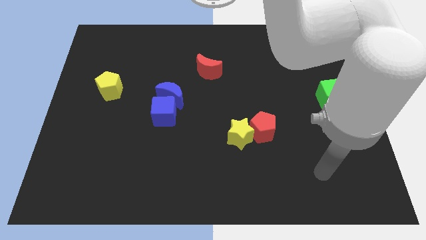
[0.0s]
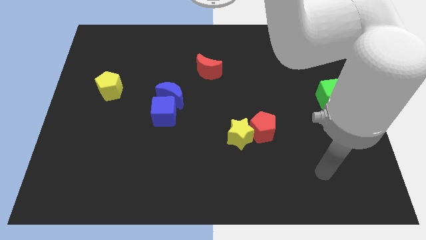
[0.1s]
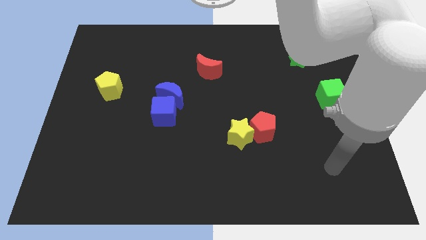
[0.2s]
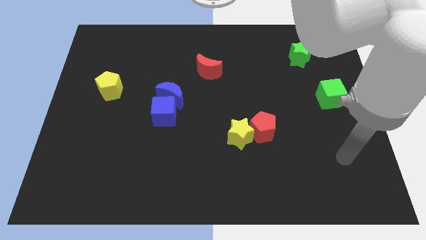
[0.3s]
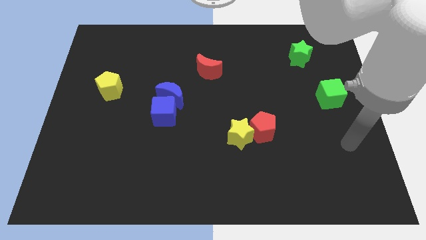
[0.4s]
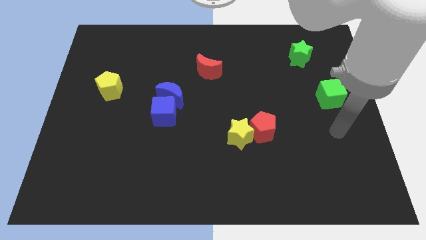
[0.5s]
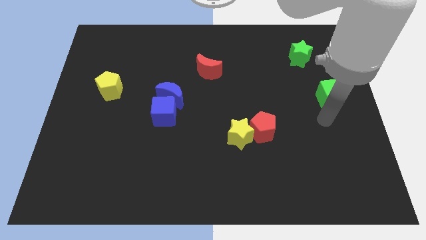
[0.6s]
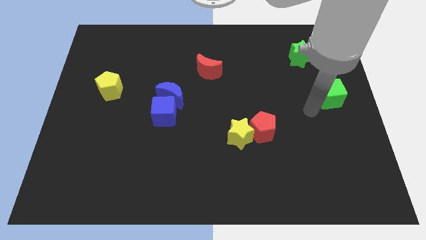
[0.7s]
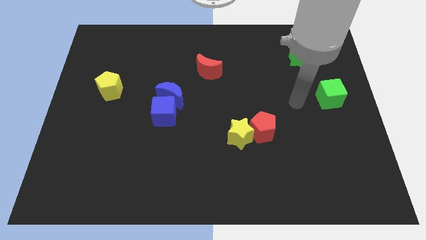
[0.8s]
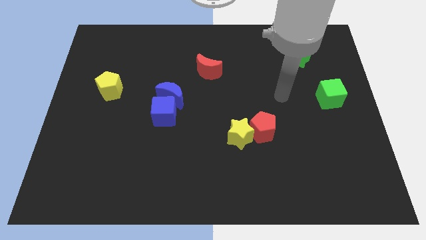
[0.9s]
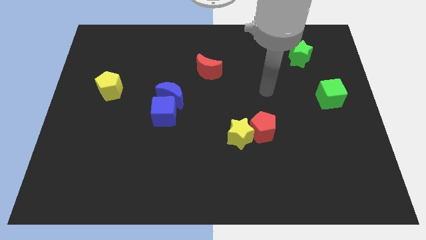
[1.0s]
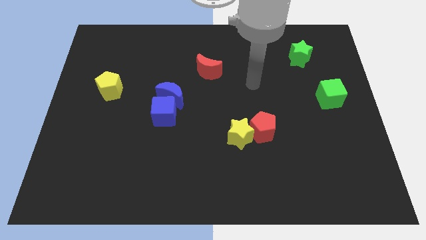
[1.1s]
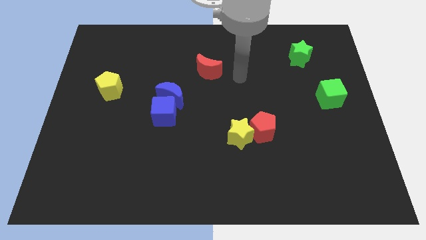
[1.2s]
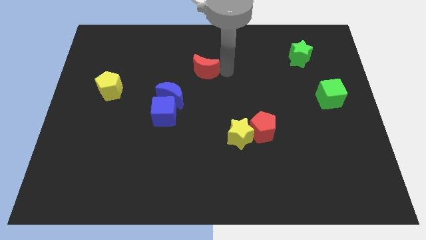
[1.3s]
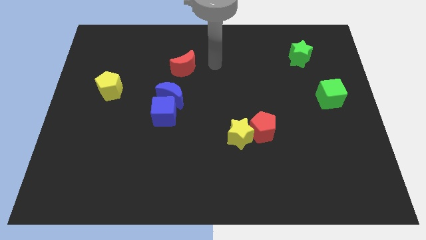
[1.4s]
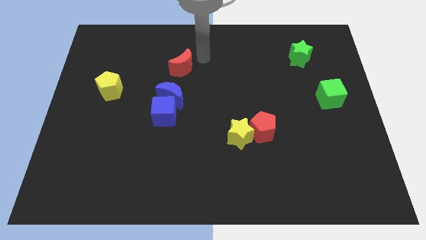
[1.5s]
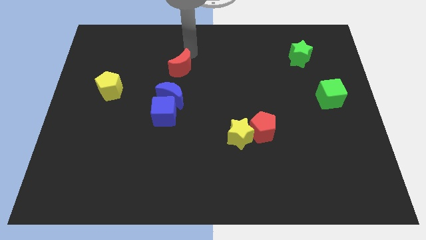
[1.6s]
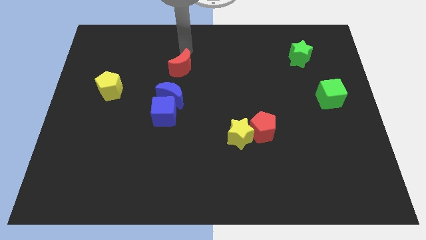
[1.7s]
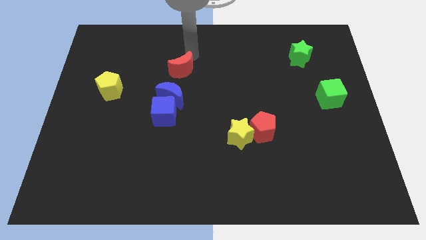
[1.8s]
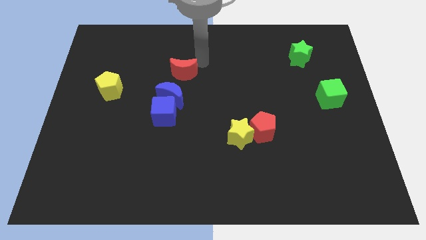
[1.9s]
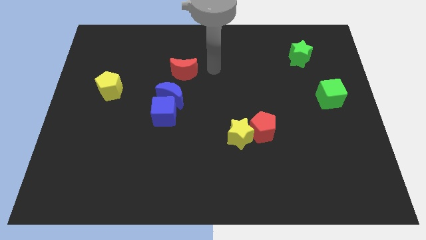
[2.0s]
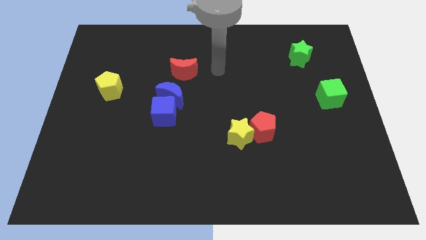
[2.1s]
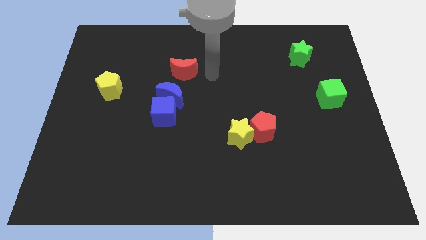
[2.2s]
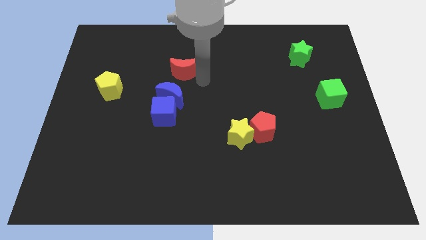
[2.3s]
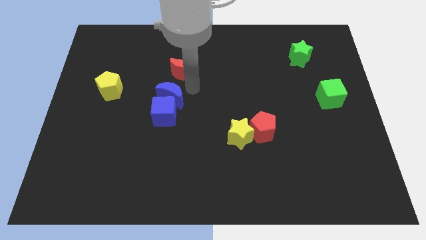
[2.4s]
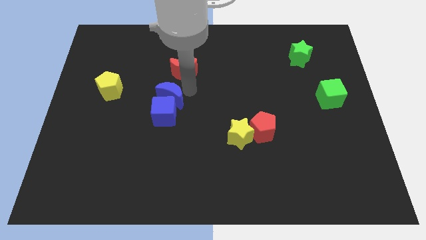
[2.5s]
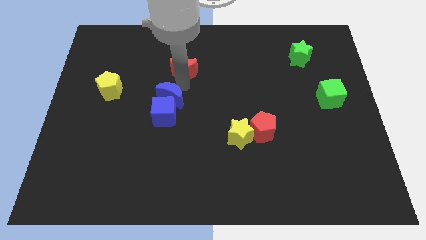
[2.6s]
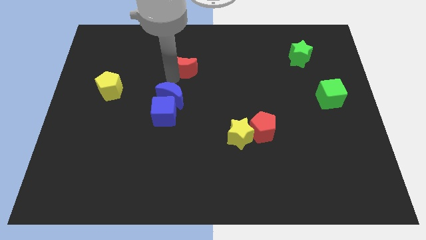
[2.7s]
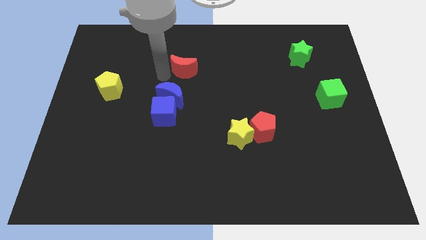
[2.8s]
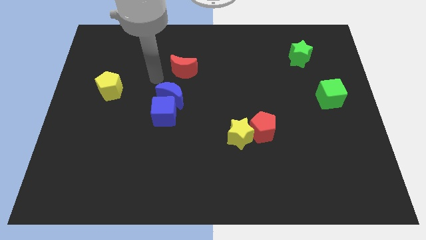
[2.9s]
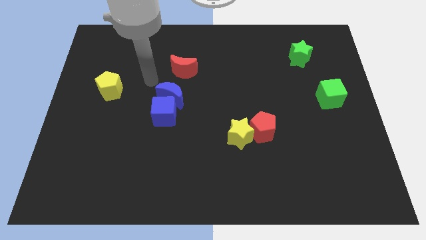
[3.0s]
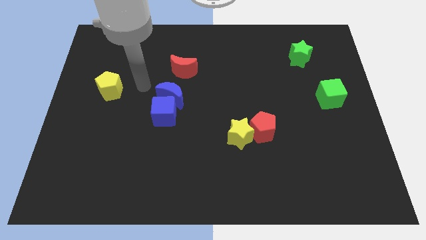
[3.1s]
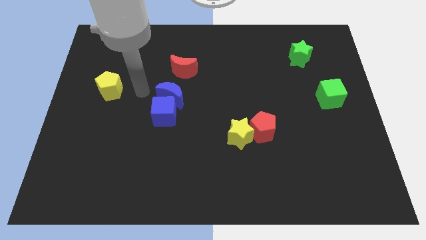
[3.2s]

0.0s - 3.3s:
put the red moon vertically above the blue moon

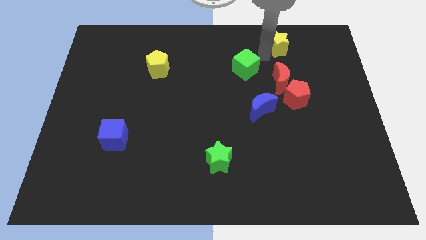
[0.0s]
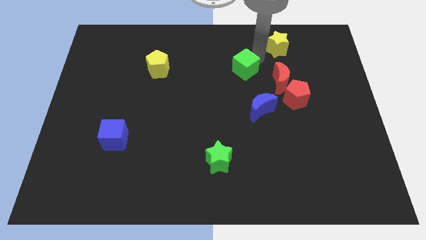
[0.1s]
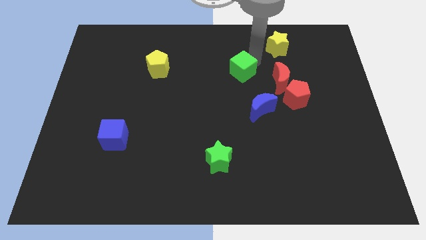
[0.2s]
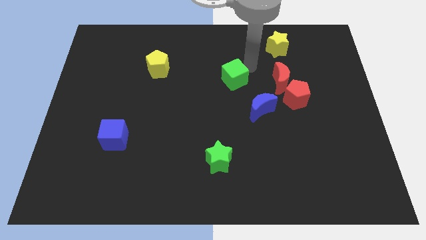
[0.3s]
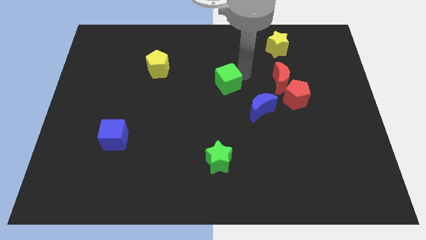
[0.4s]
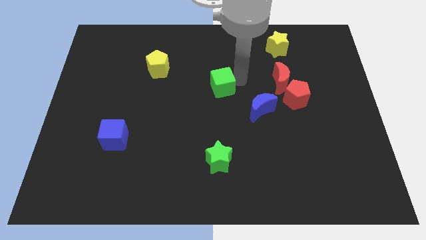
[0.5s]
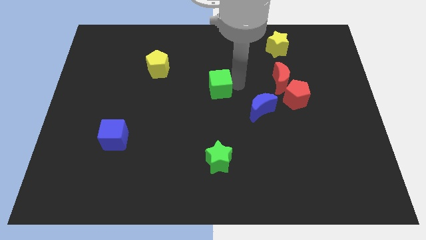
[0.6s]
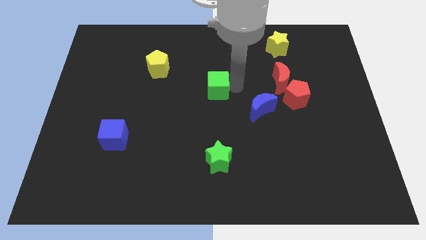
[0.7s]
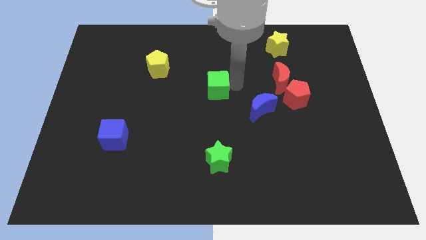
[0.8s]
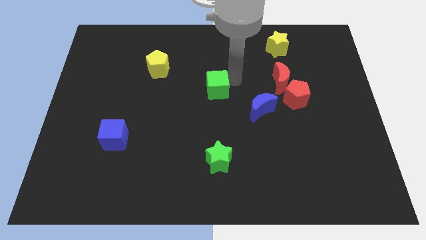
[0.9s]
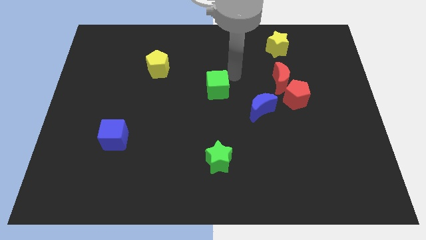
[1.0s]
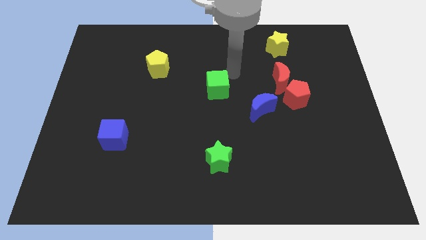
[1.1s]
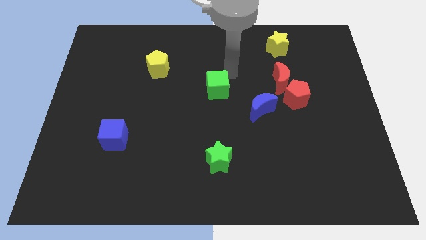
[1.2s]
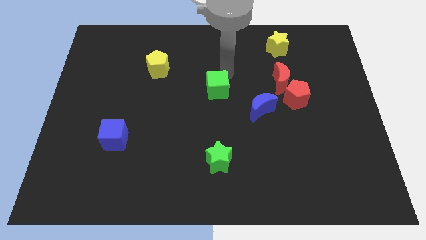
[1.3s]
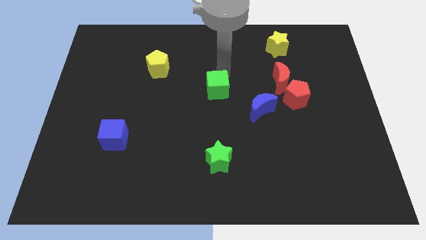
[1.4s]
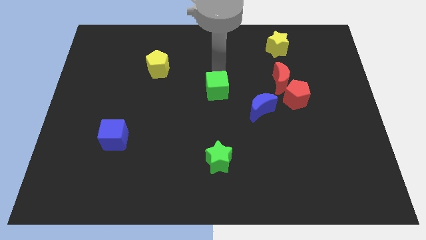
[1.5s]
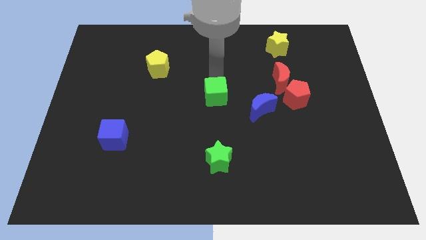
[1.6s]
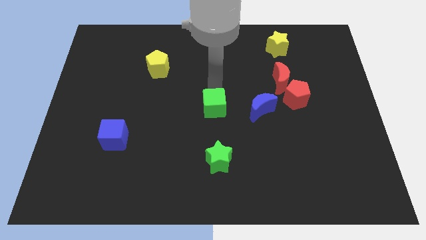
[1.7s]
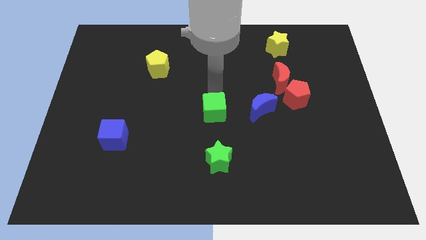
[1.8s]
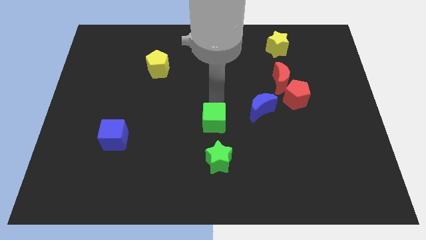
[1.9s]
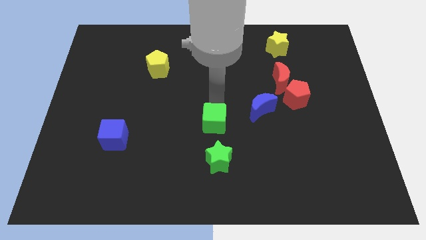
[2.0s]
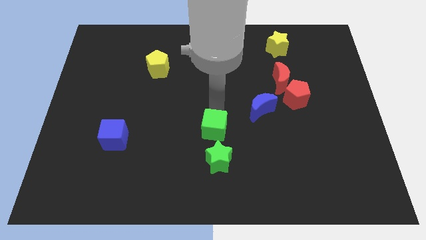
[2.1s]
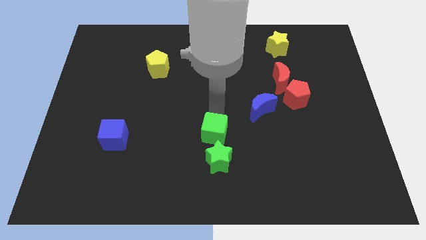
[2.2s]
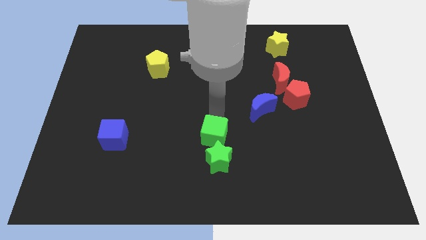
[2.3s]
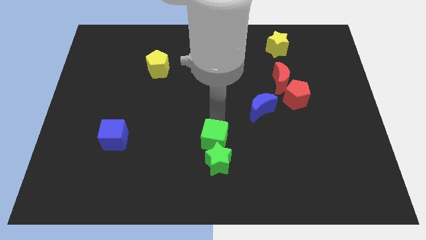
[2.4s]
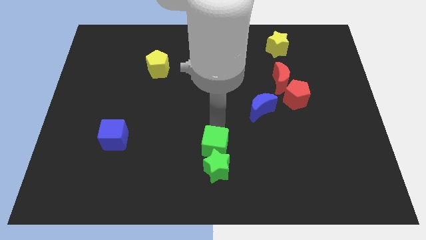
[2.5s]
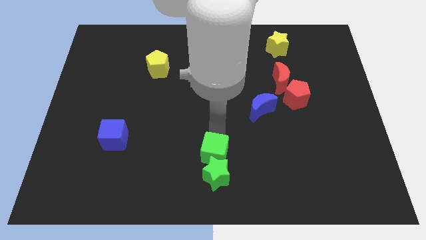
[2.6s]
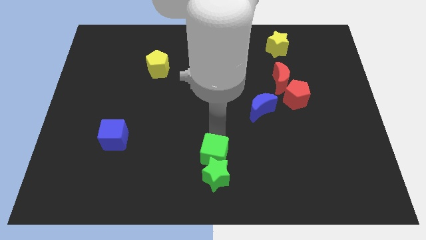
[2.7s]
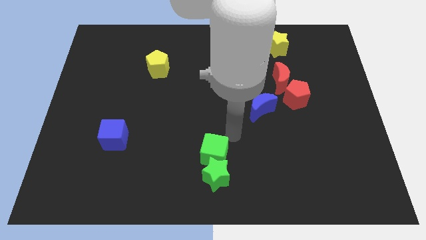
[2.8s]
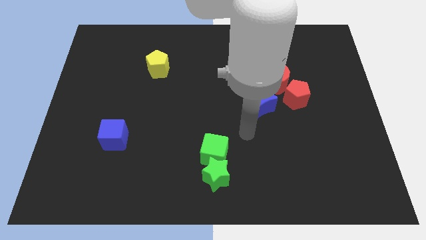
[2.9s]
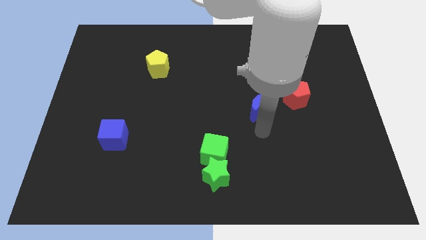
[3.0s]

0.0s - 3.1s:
push the green cube to the top side of the green star

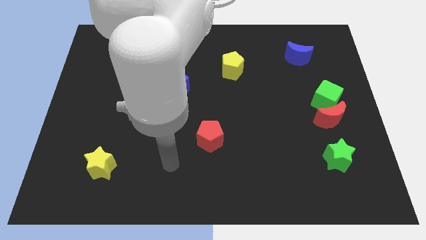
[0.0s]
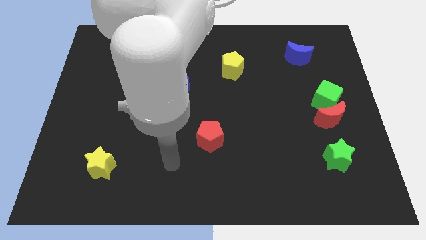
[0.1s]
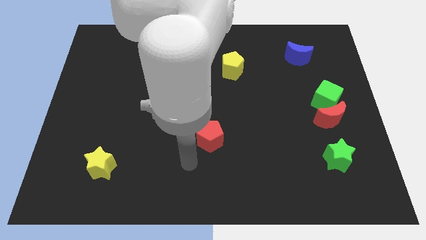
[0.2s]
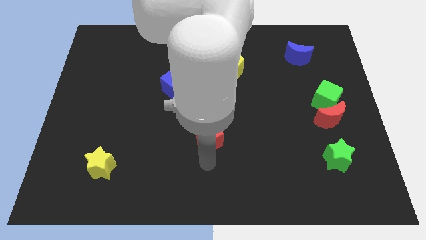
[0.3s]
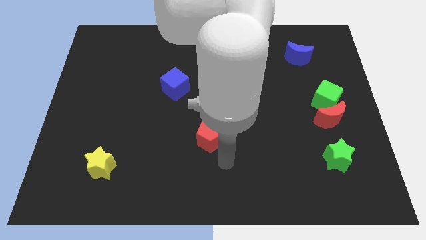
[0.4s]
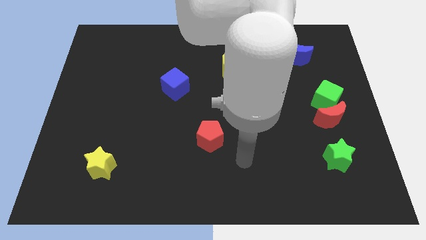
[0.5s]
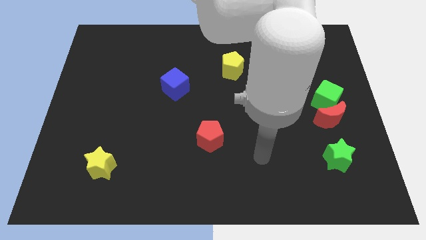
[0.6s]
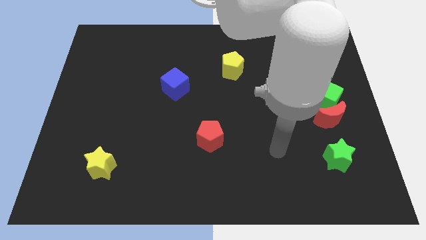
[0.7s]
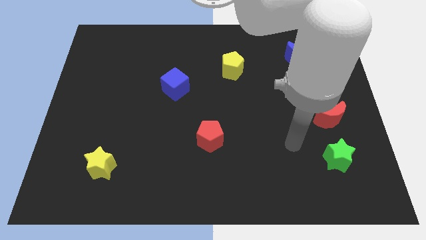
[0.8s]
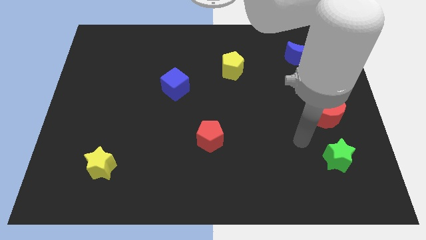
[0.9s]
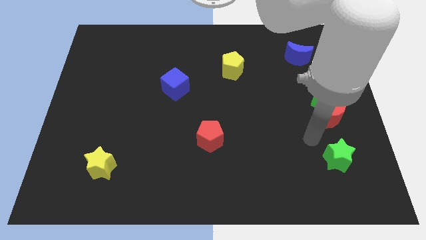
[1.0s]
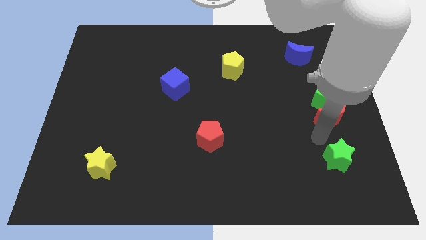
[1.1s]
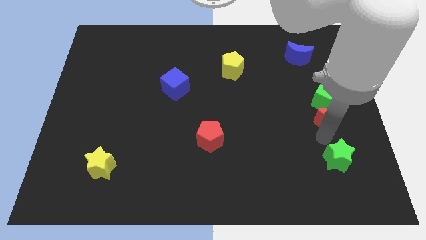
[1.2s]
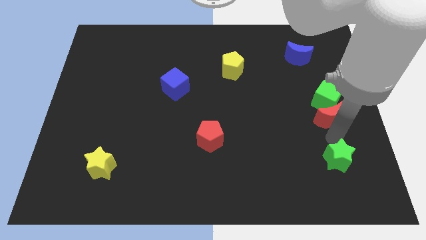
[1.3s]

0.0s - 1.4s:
place your arm in between red moon and green star

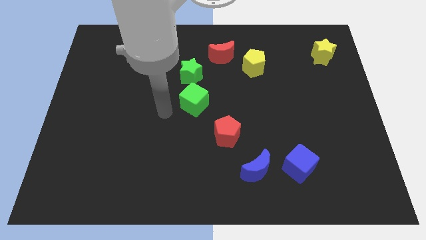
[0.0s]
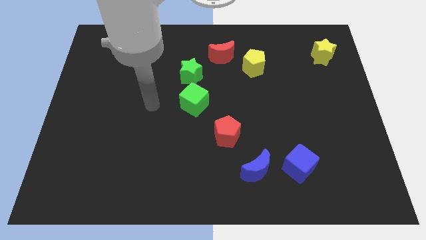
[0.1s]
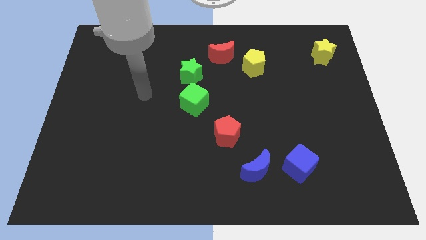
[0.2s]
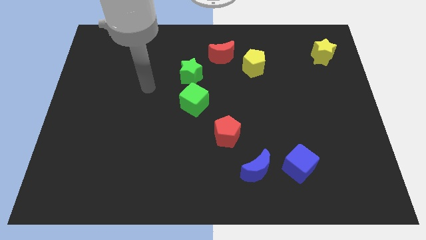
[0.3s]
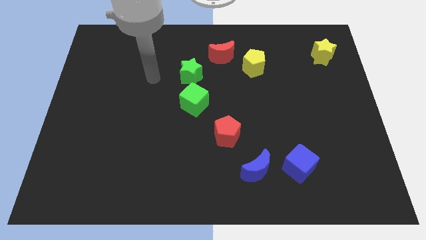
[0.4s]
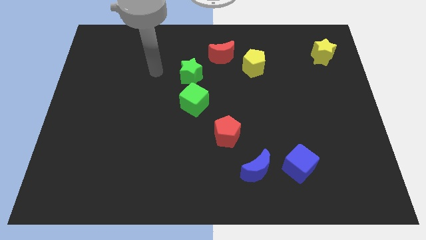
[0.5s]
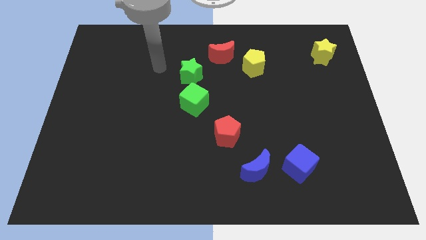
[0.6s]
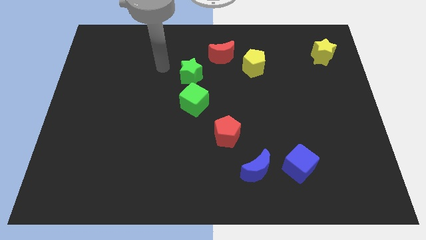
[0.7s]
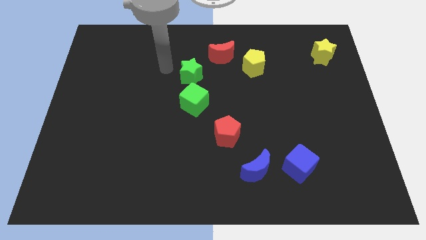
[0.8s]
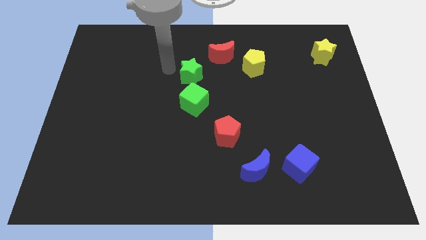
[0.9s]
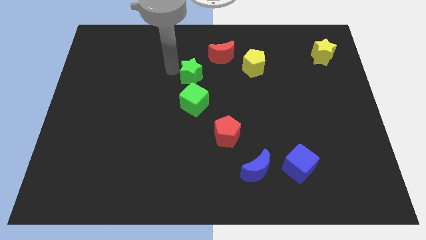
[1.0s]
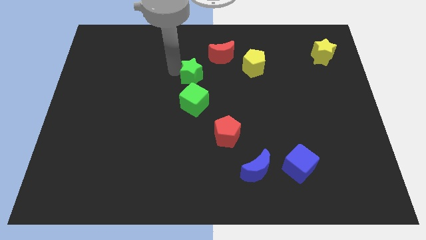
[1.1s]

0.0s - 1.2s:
point your arm at the left side of the green star
